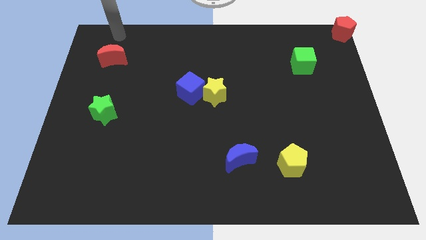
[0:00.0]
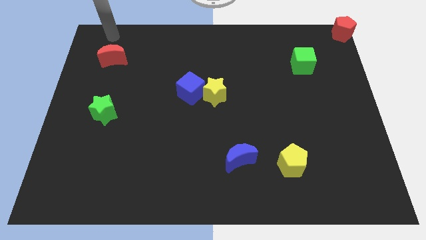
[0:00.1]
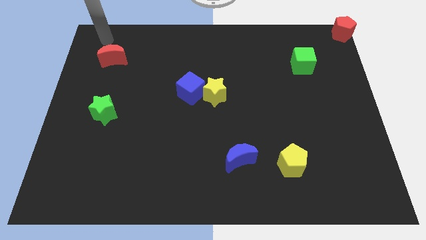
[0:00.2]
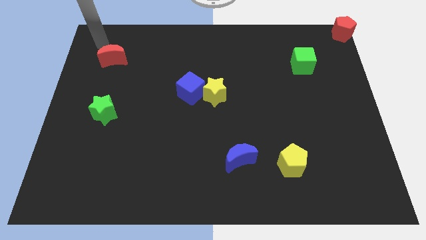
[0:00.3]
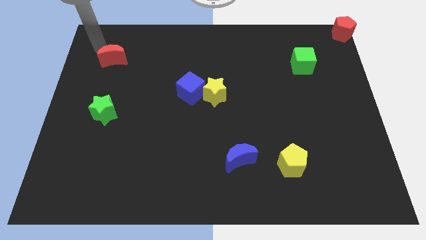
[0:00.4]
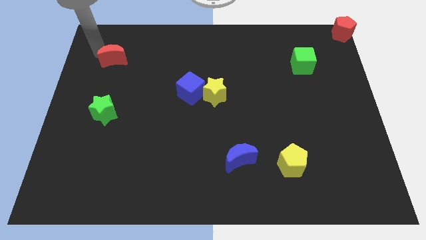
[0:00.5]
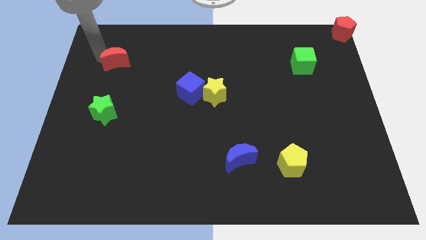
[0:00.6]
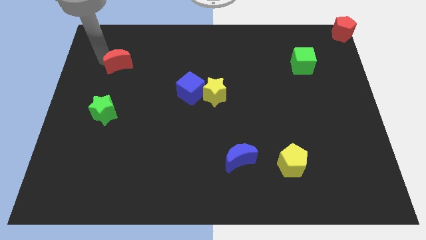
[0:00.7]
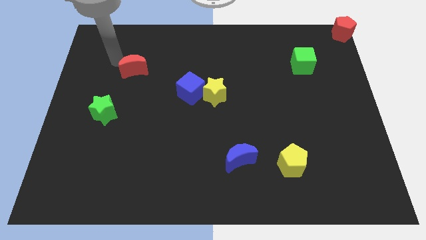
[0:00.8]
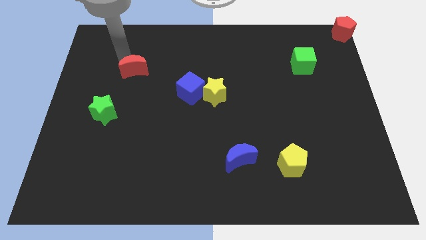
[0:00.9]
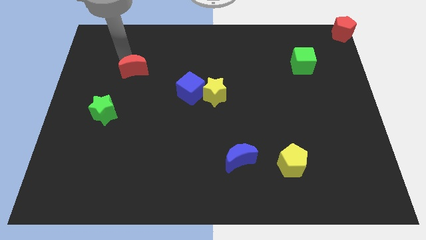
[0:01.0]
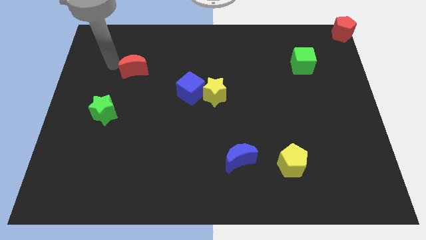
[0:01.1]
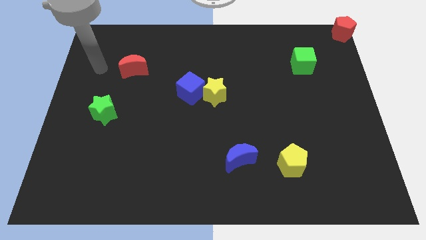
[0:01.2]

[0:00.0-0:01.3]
push the red crescent slightly downwards

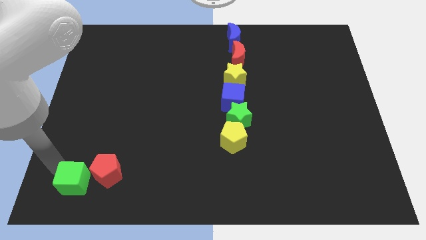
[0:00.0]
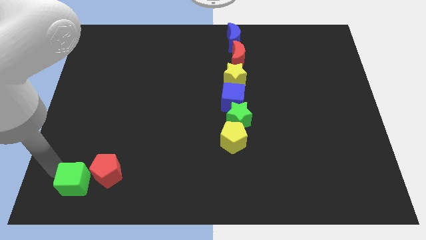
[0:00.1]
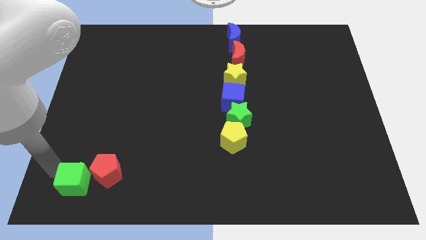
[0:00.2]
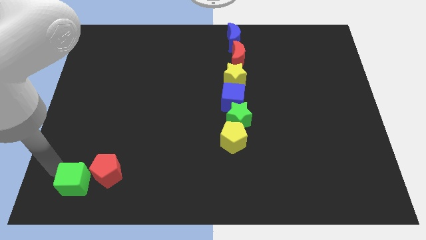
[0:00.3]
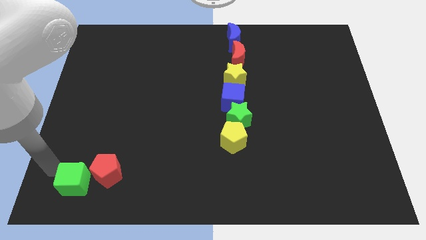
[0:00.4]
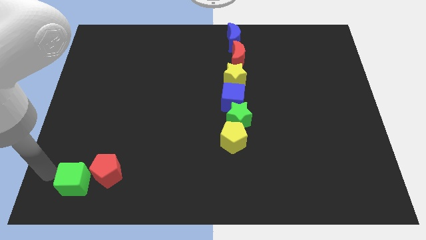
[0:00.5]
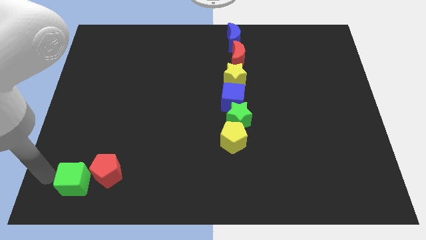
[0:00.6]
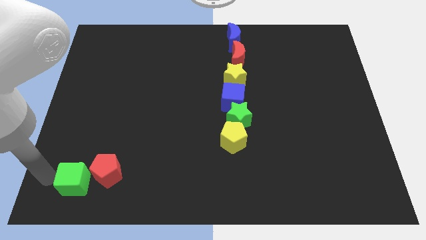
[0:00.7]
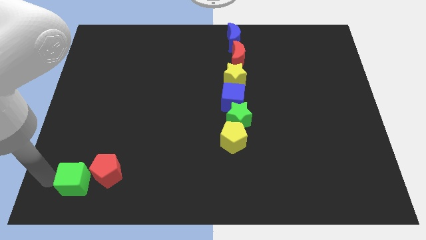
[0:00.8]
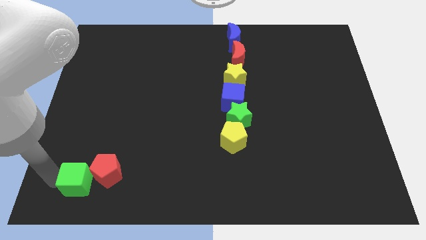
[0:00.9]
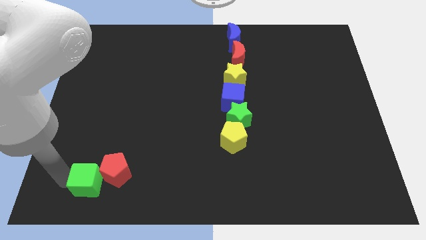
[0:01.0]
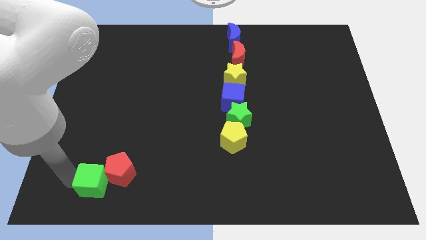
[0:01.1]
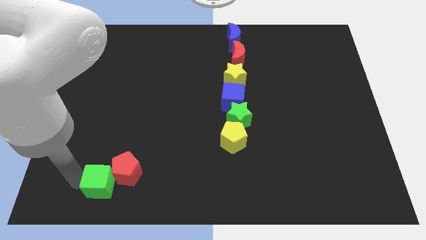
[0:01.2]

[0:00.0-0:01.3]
push the green cube into the red pentagon

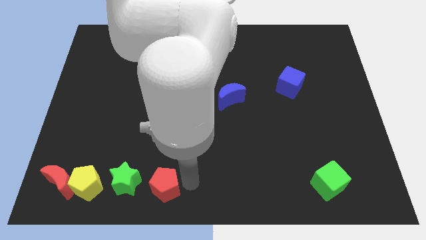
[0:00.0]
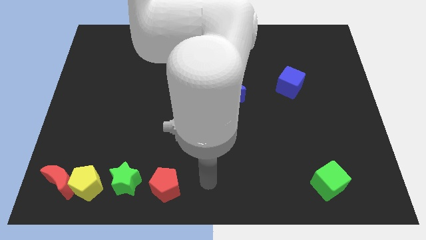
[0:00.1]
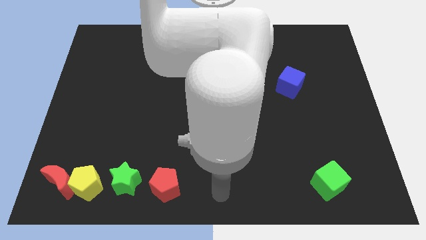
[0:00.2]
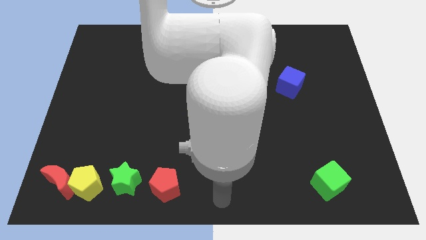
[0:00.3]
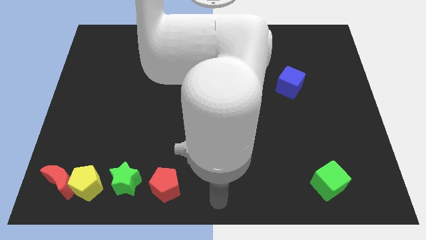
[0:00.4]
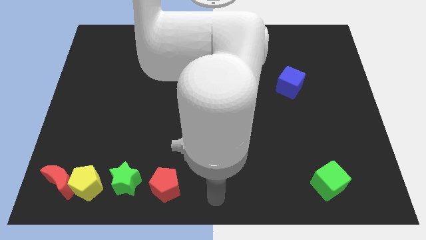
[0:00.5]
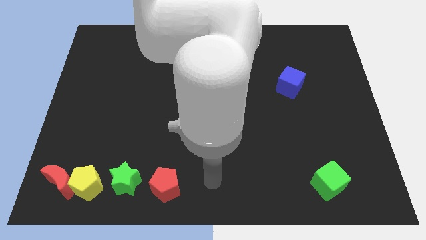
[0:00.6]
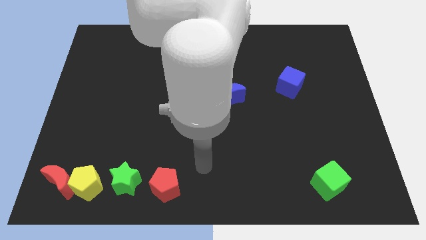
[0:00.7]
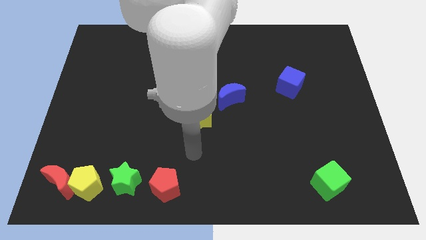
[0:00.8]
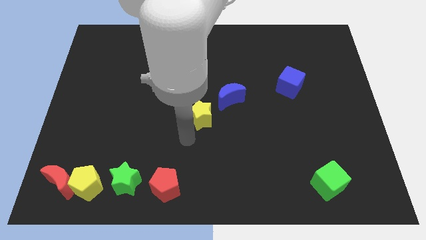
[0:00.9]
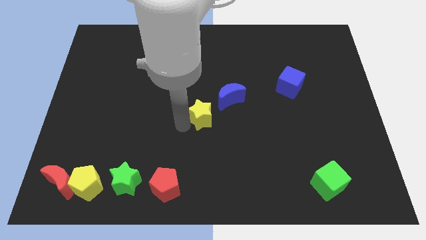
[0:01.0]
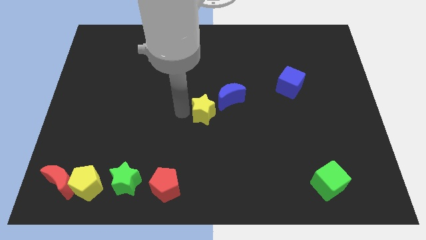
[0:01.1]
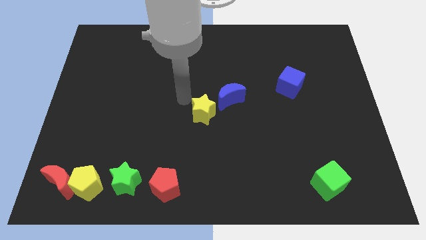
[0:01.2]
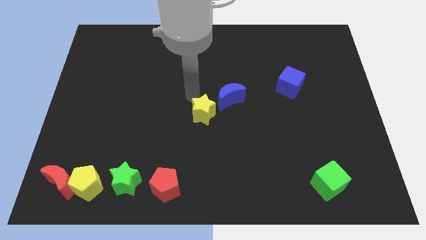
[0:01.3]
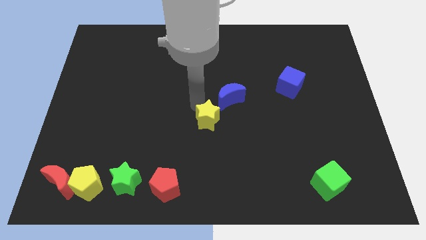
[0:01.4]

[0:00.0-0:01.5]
move your arm to the top of the yellow star

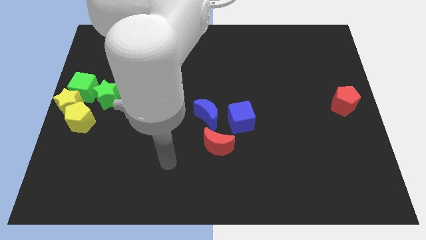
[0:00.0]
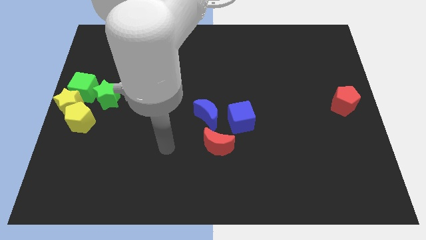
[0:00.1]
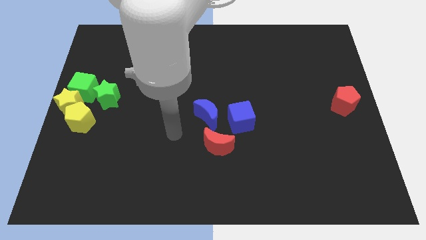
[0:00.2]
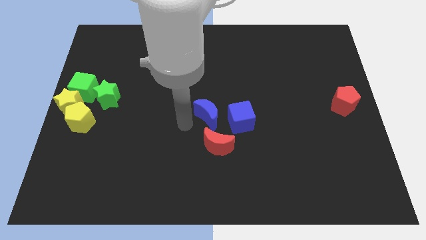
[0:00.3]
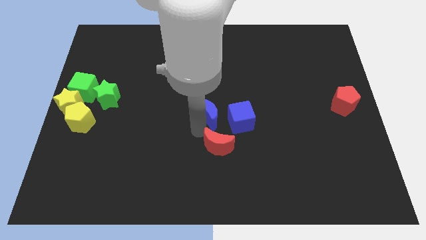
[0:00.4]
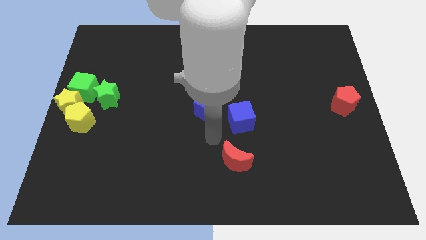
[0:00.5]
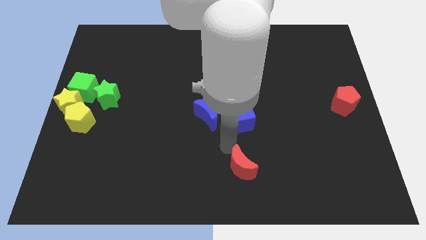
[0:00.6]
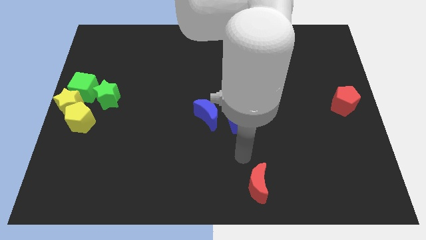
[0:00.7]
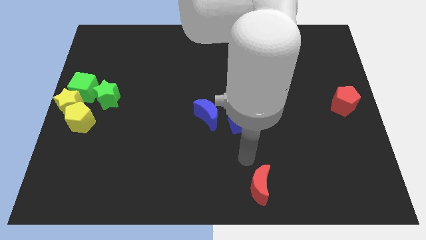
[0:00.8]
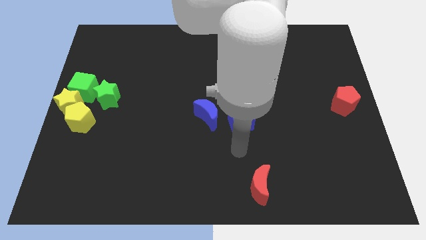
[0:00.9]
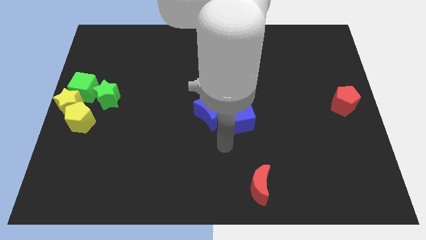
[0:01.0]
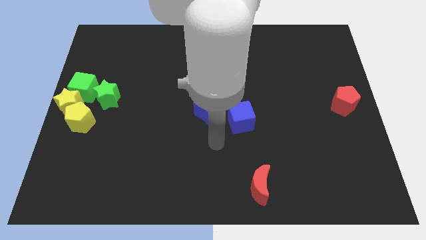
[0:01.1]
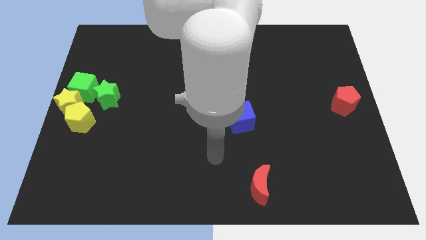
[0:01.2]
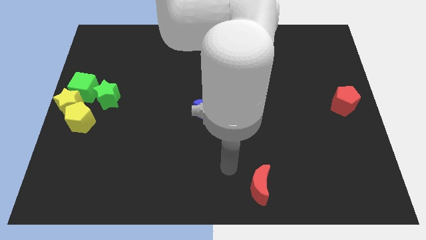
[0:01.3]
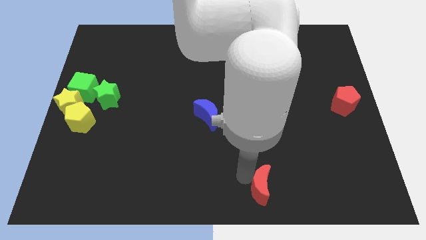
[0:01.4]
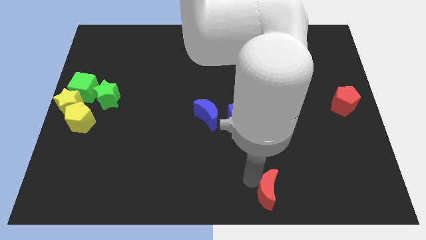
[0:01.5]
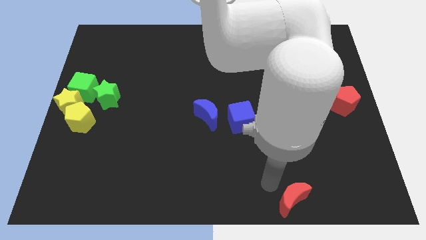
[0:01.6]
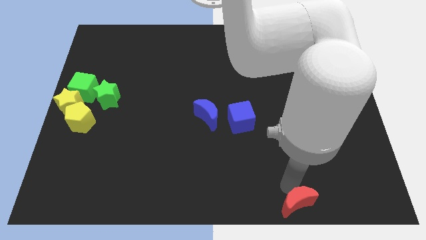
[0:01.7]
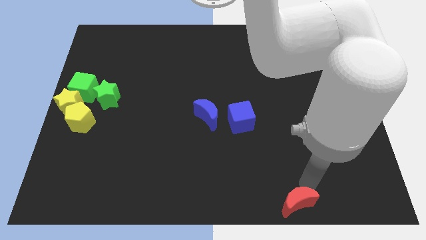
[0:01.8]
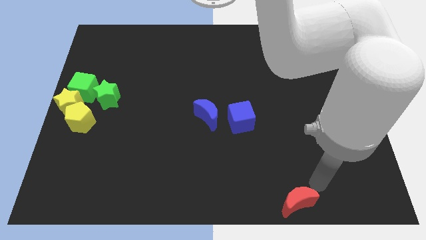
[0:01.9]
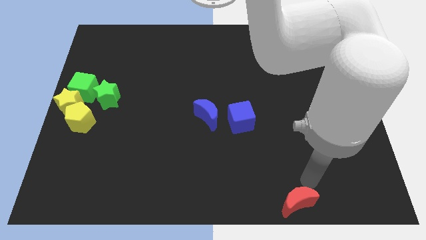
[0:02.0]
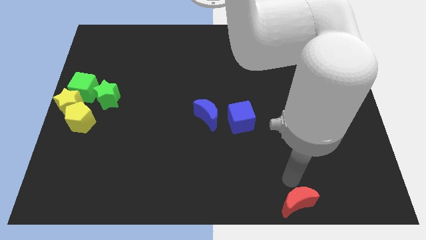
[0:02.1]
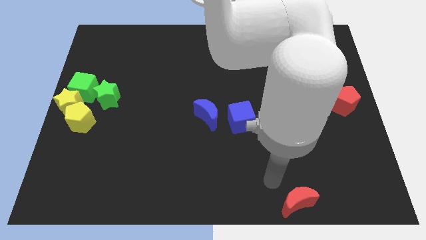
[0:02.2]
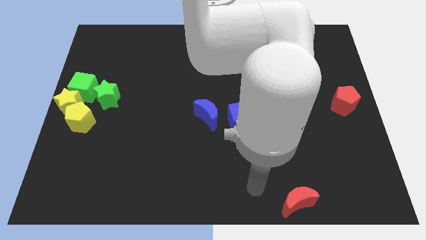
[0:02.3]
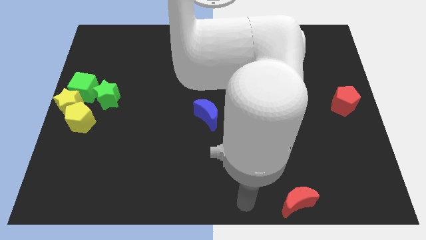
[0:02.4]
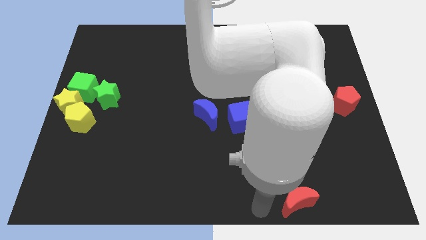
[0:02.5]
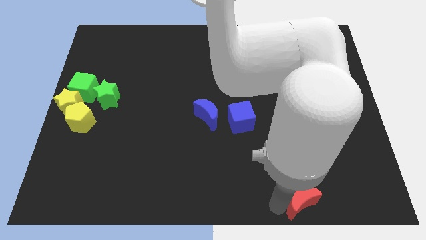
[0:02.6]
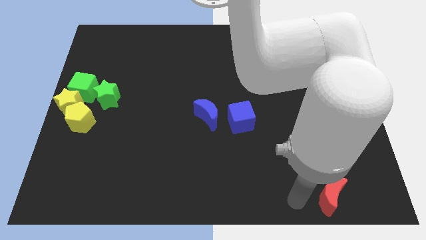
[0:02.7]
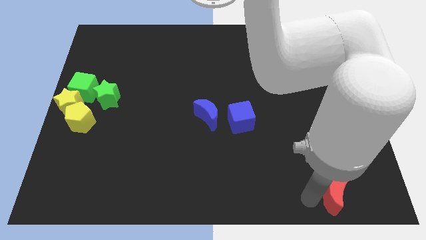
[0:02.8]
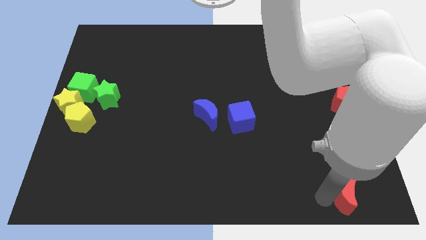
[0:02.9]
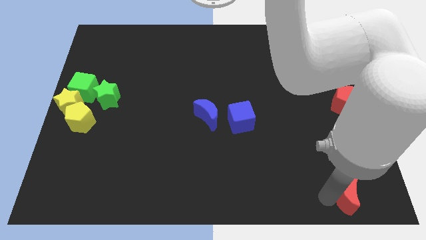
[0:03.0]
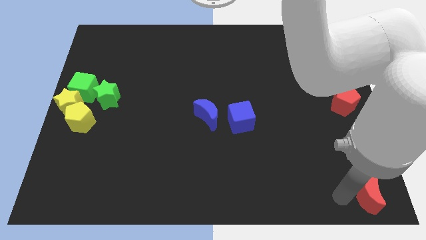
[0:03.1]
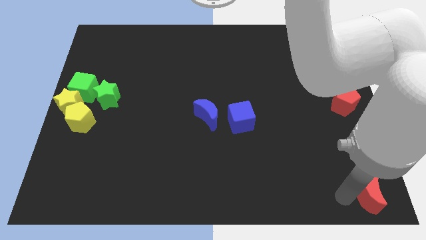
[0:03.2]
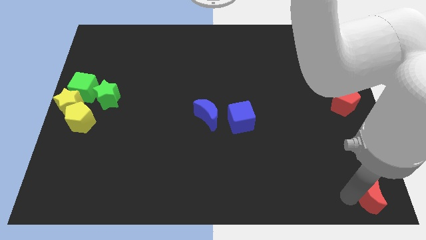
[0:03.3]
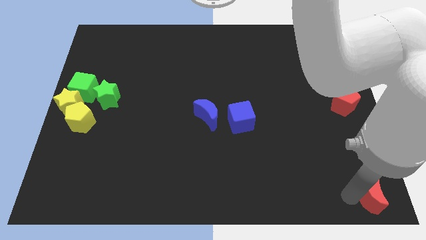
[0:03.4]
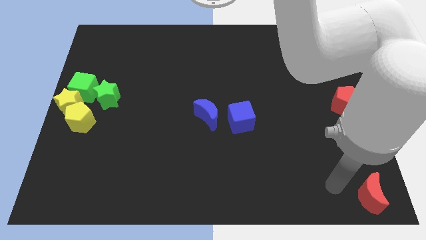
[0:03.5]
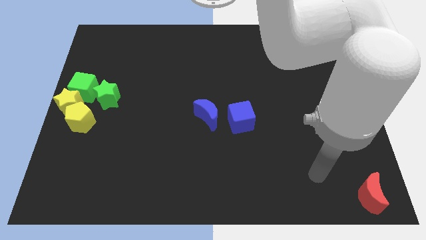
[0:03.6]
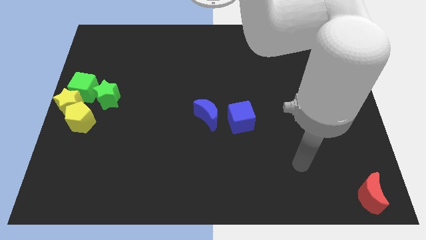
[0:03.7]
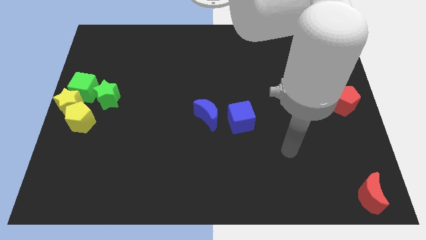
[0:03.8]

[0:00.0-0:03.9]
put the red moon at the bottom right corner of the board

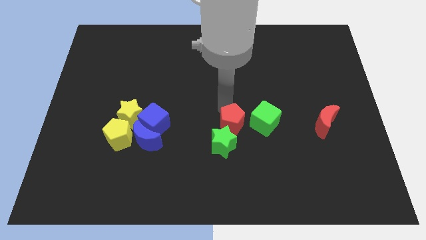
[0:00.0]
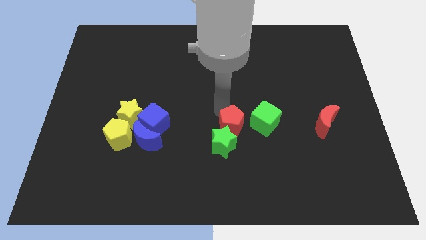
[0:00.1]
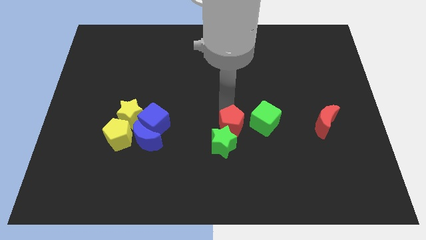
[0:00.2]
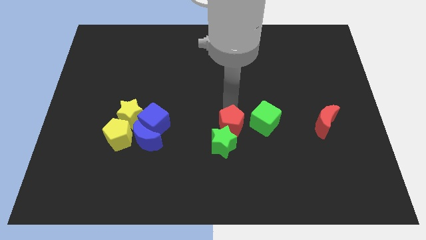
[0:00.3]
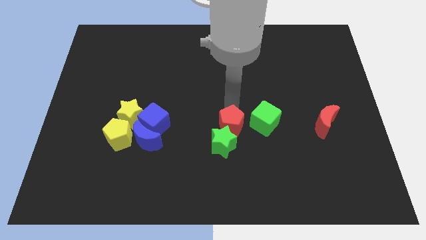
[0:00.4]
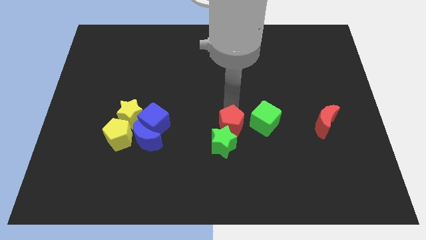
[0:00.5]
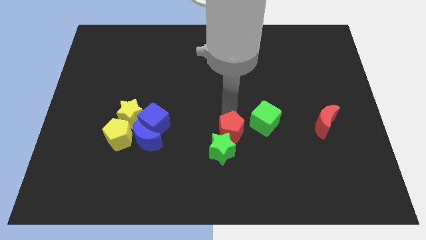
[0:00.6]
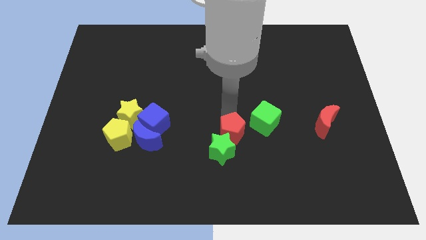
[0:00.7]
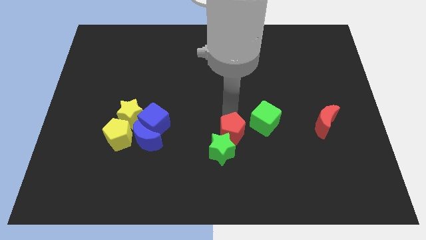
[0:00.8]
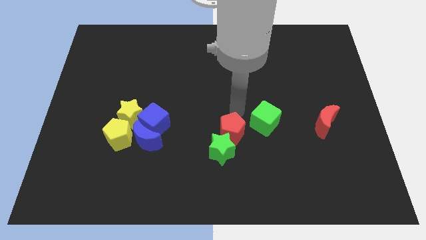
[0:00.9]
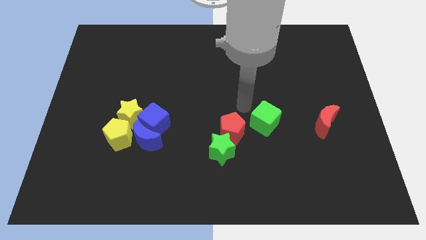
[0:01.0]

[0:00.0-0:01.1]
push red pentagon into the green star
